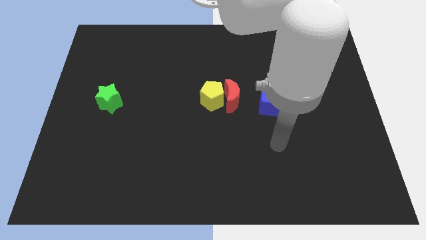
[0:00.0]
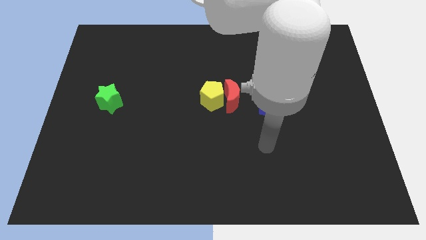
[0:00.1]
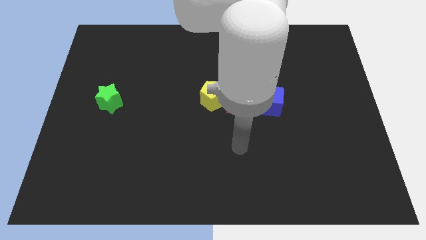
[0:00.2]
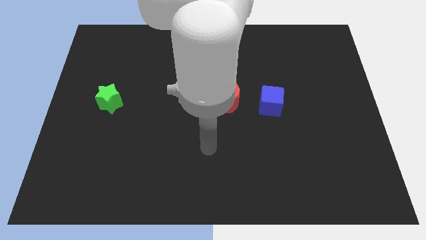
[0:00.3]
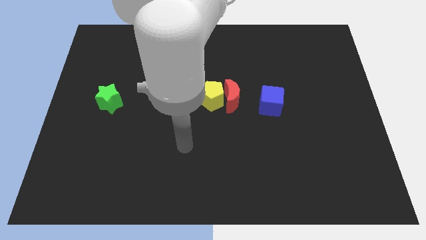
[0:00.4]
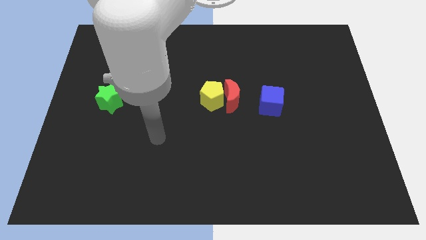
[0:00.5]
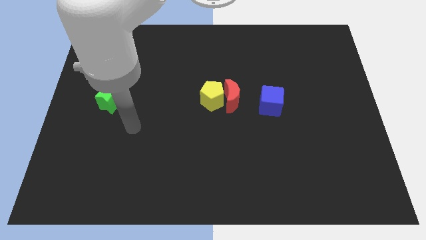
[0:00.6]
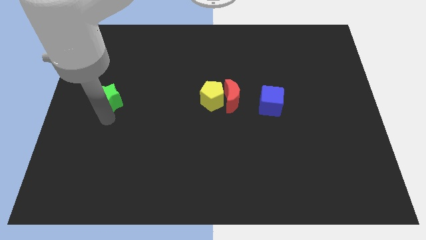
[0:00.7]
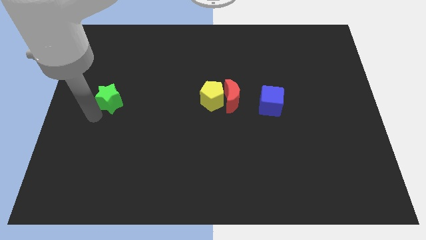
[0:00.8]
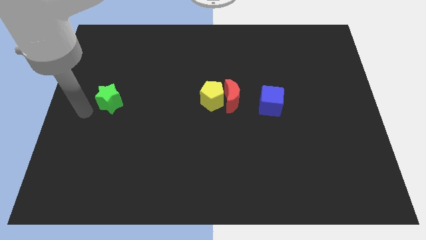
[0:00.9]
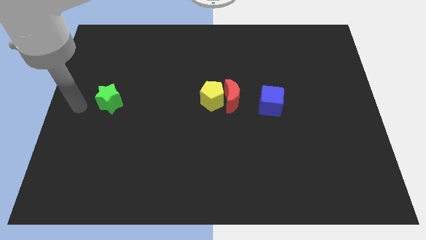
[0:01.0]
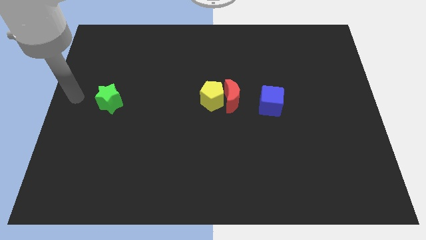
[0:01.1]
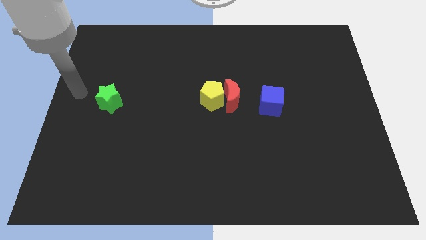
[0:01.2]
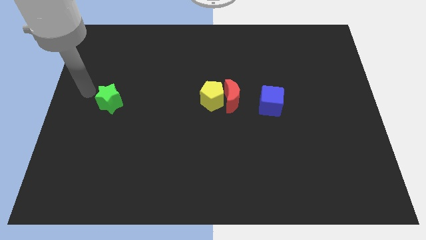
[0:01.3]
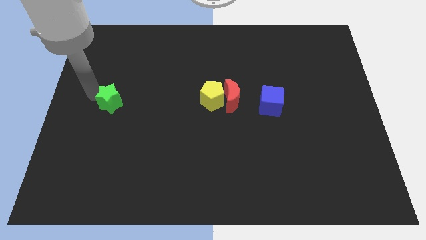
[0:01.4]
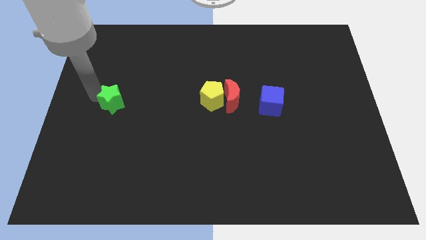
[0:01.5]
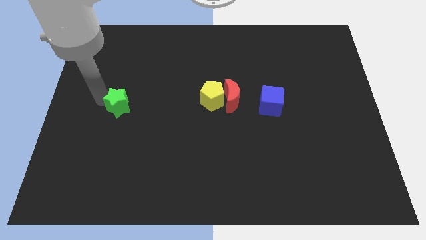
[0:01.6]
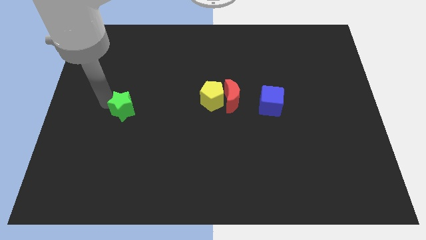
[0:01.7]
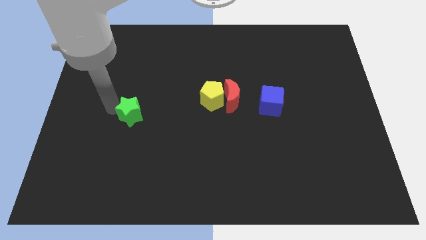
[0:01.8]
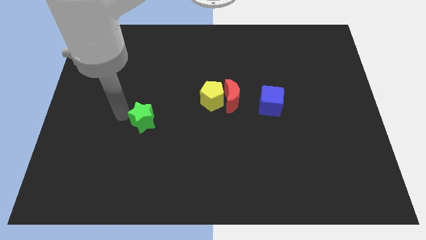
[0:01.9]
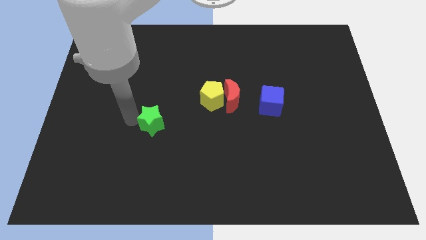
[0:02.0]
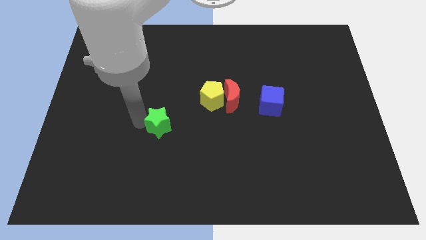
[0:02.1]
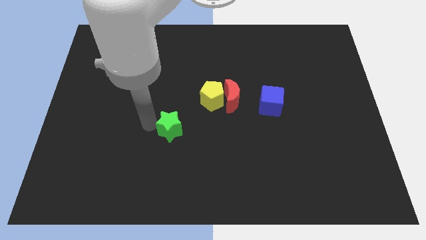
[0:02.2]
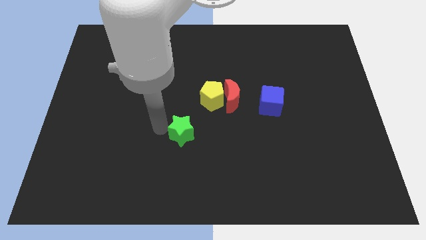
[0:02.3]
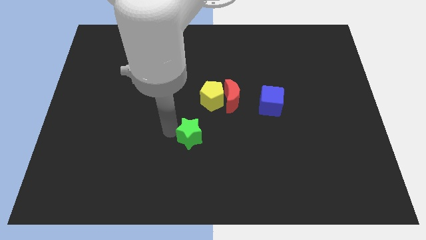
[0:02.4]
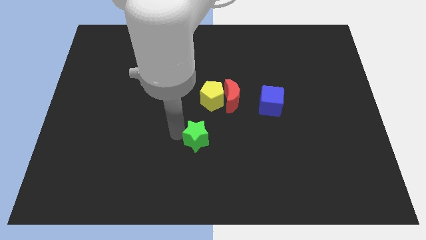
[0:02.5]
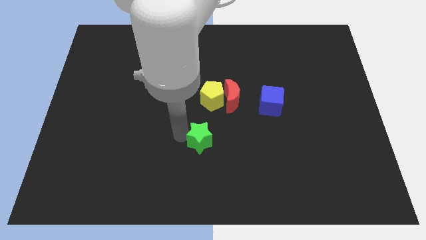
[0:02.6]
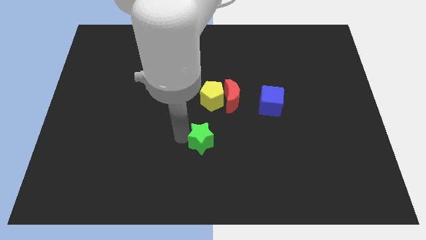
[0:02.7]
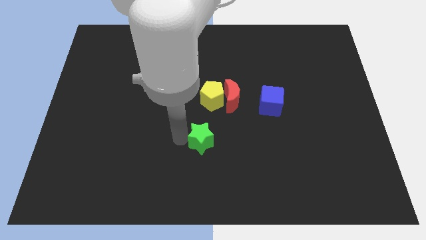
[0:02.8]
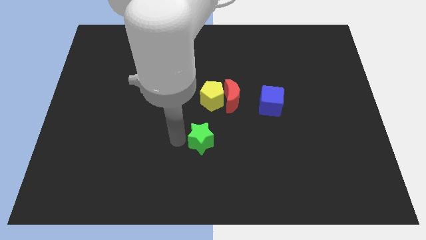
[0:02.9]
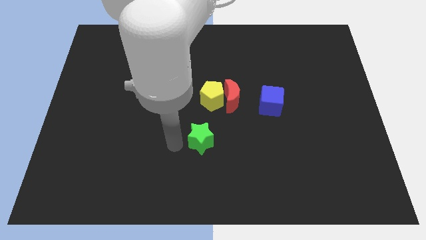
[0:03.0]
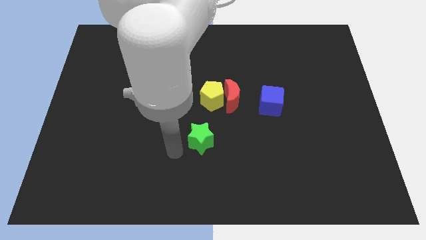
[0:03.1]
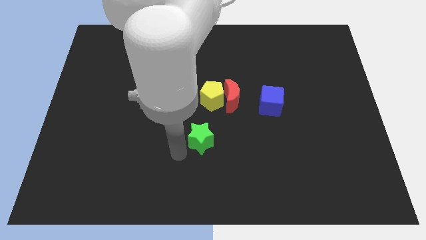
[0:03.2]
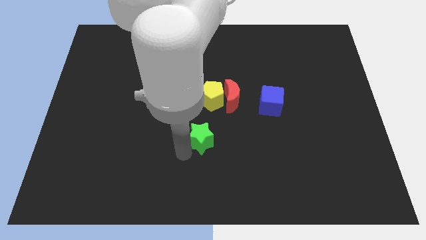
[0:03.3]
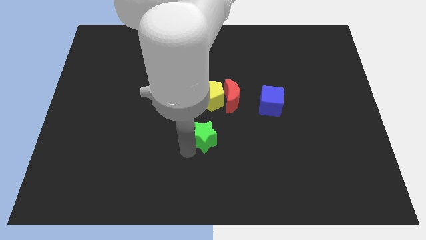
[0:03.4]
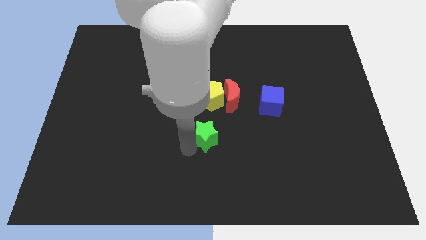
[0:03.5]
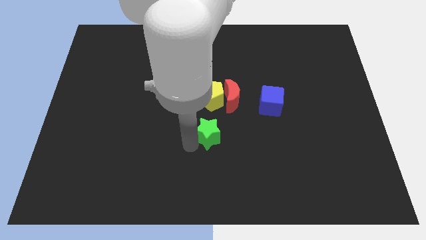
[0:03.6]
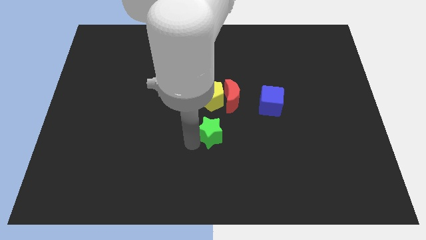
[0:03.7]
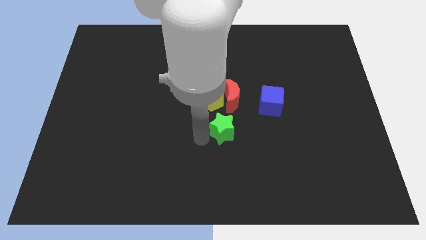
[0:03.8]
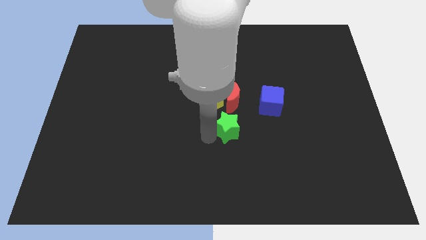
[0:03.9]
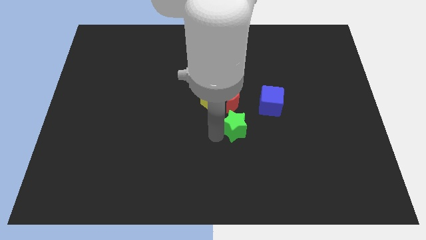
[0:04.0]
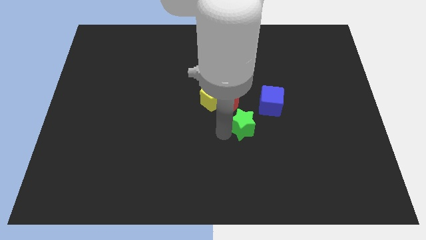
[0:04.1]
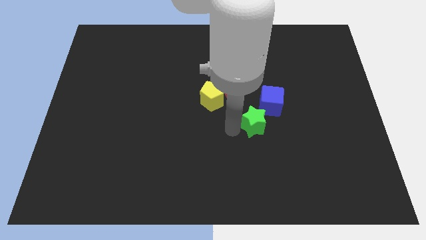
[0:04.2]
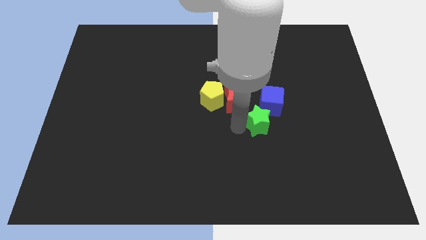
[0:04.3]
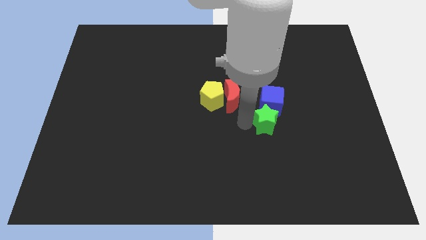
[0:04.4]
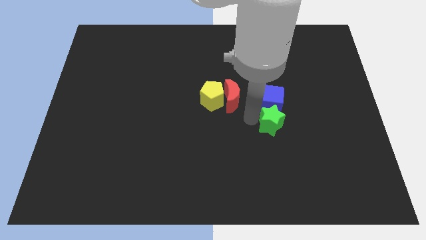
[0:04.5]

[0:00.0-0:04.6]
move the star next to the cube

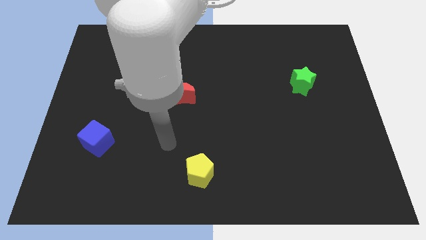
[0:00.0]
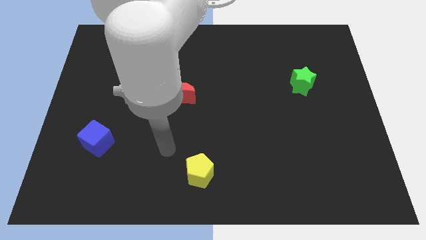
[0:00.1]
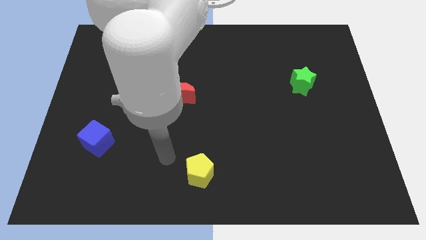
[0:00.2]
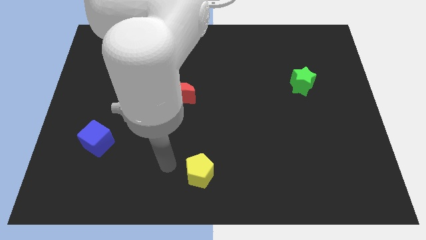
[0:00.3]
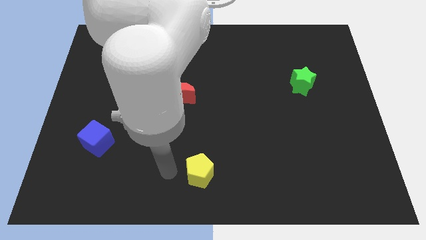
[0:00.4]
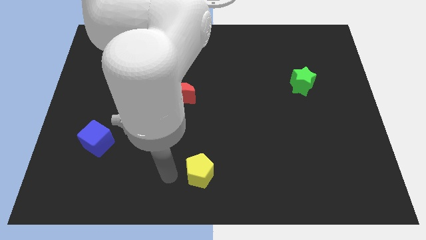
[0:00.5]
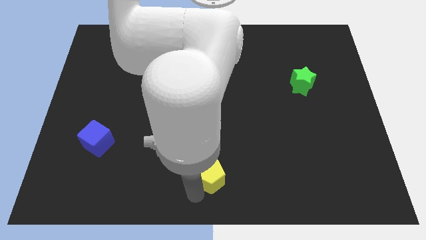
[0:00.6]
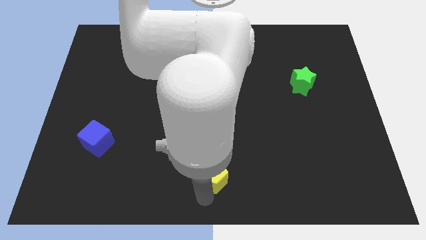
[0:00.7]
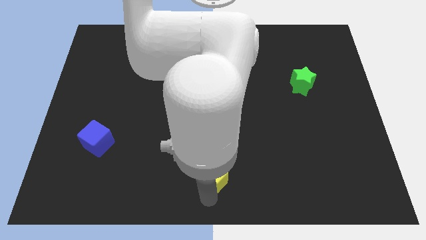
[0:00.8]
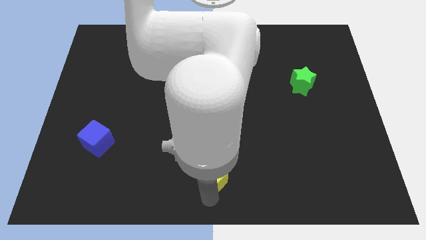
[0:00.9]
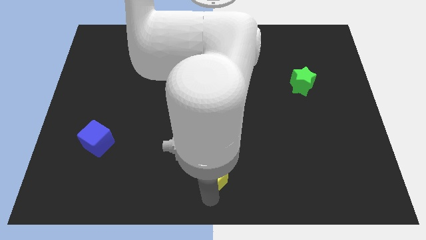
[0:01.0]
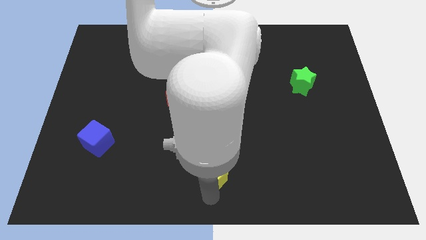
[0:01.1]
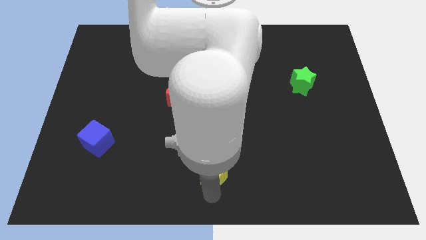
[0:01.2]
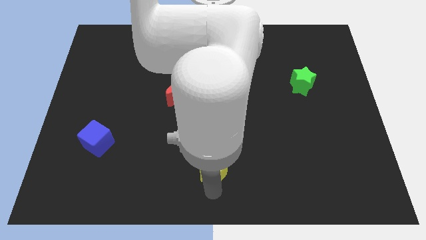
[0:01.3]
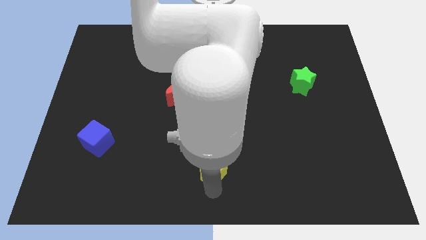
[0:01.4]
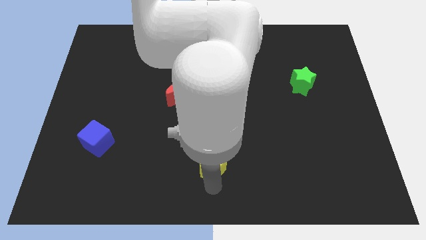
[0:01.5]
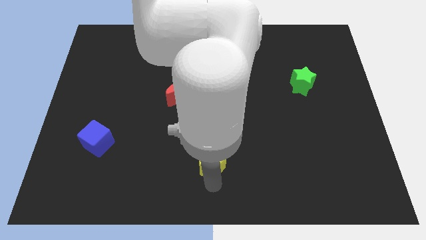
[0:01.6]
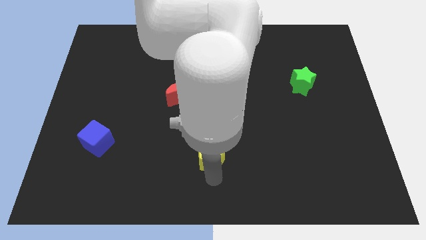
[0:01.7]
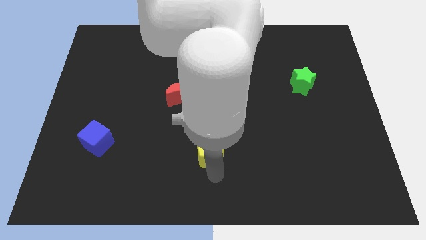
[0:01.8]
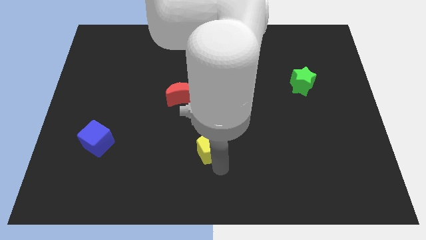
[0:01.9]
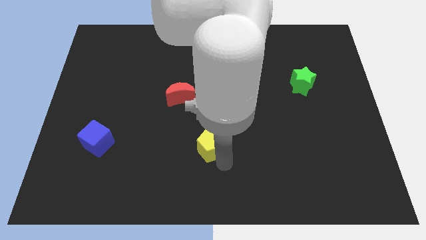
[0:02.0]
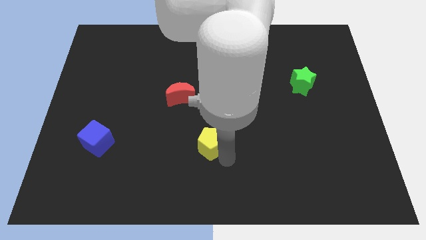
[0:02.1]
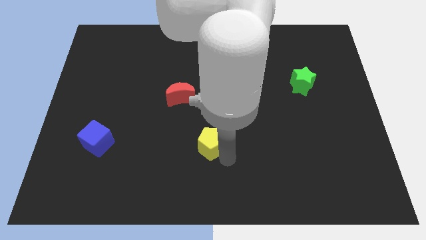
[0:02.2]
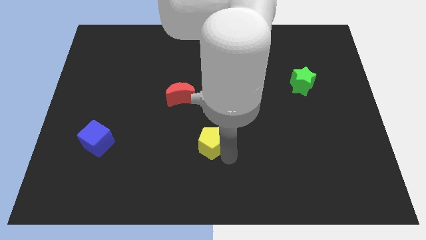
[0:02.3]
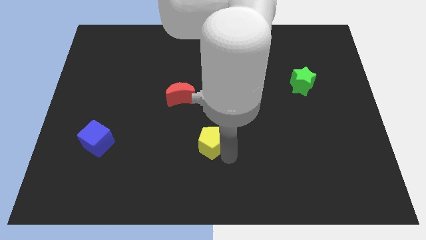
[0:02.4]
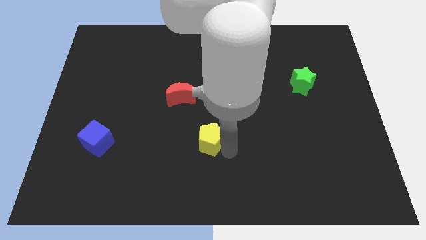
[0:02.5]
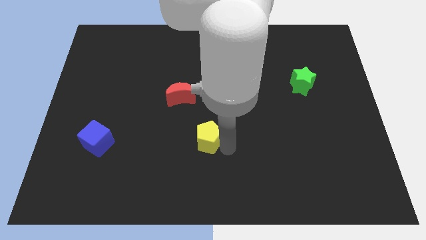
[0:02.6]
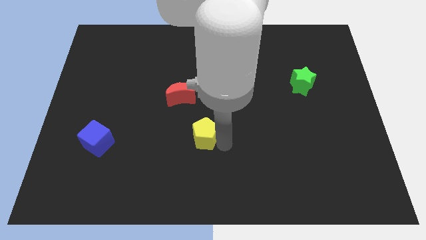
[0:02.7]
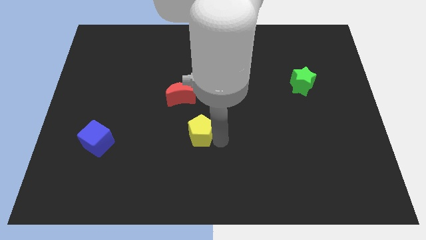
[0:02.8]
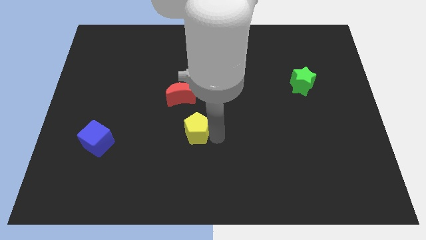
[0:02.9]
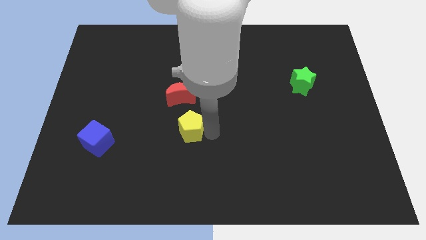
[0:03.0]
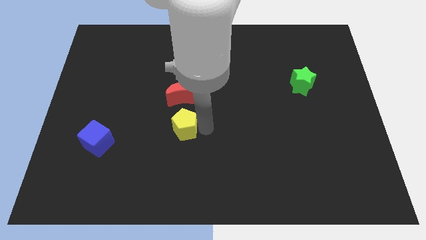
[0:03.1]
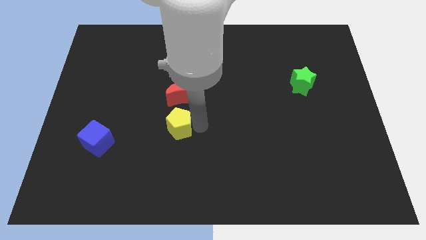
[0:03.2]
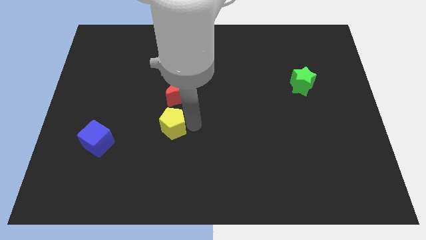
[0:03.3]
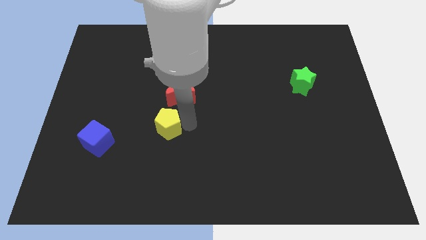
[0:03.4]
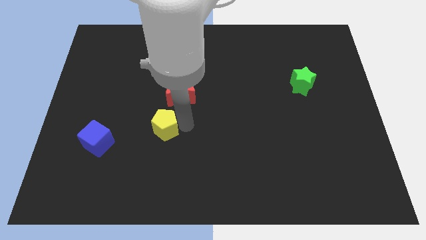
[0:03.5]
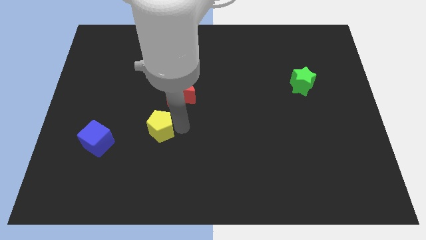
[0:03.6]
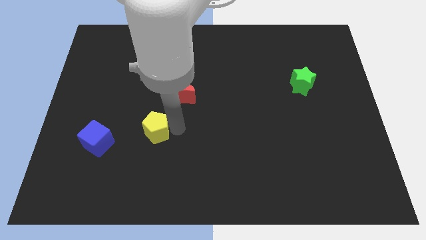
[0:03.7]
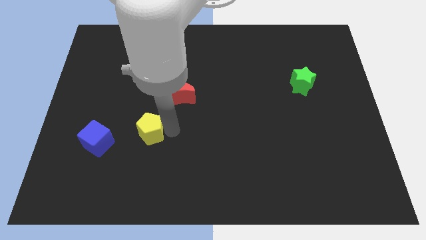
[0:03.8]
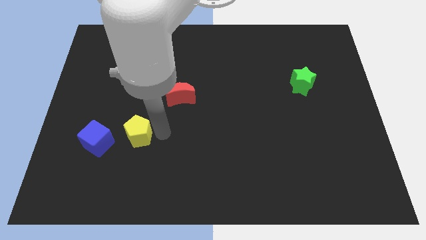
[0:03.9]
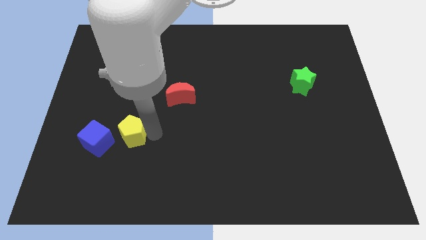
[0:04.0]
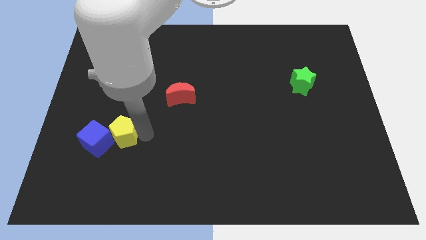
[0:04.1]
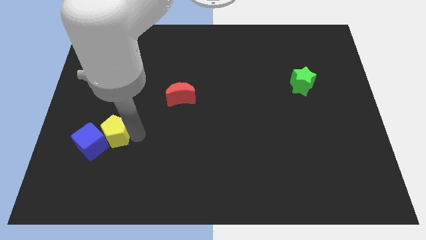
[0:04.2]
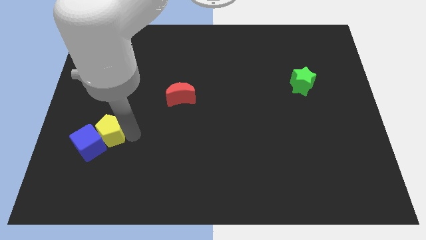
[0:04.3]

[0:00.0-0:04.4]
push the pentagon next to the blue cube
